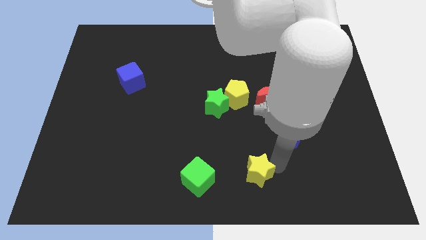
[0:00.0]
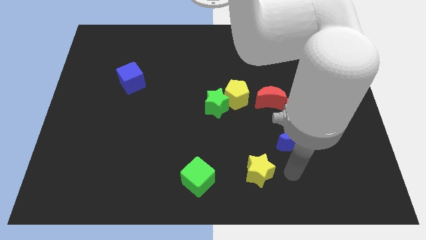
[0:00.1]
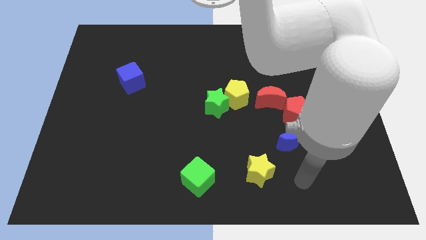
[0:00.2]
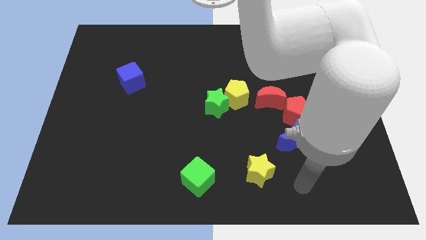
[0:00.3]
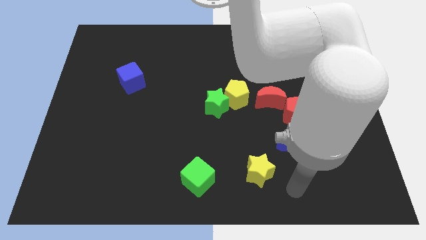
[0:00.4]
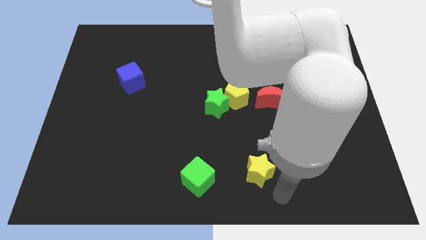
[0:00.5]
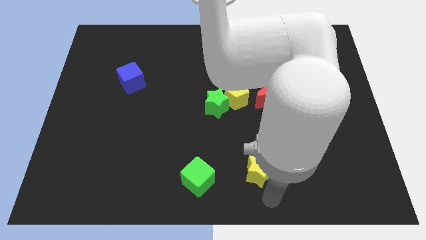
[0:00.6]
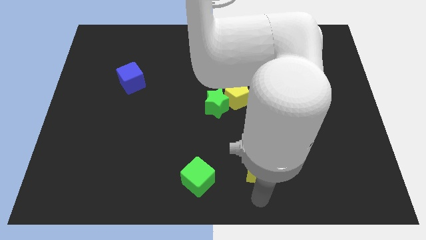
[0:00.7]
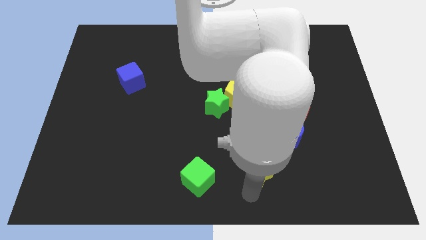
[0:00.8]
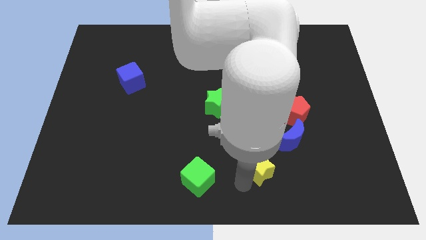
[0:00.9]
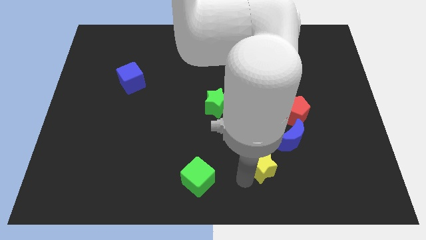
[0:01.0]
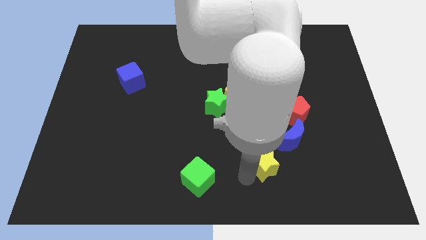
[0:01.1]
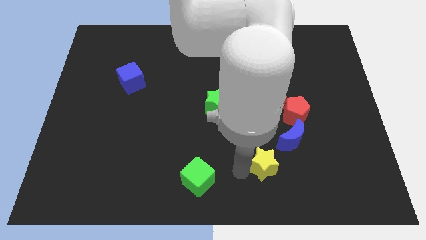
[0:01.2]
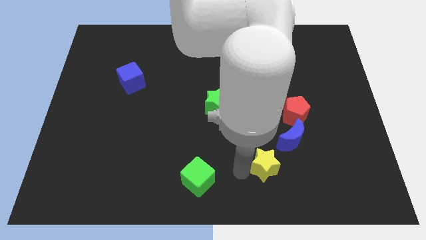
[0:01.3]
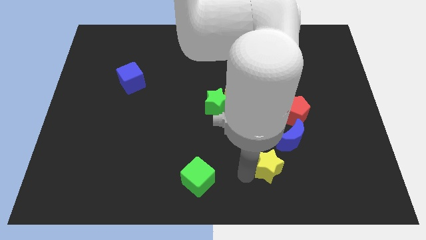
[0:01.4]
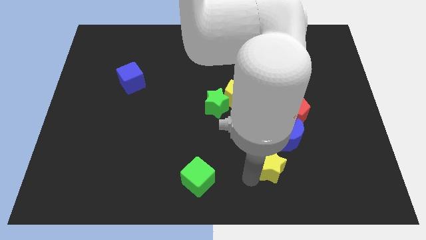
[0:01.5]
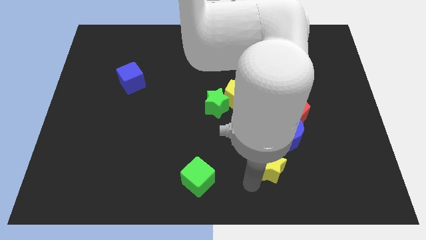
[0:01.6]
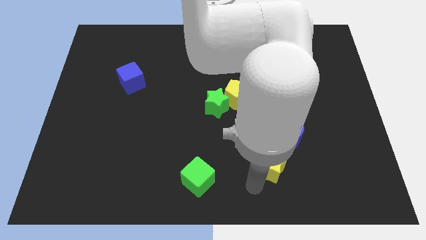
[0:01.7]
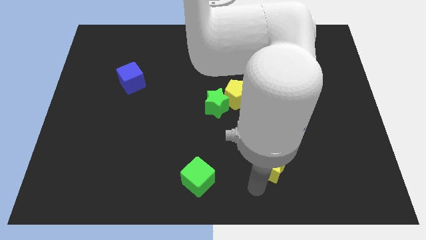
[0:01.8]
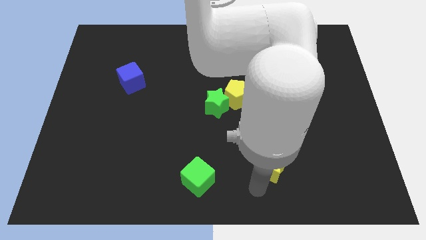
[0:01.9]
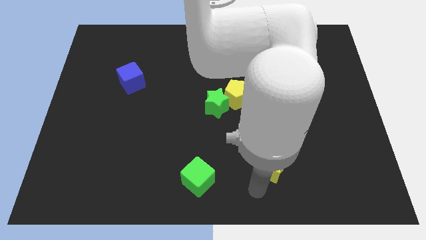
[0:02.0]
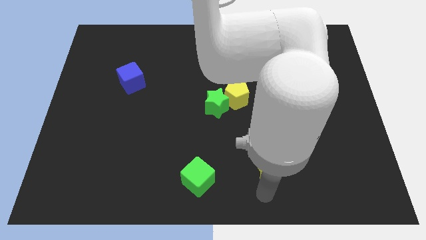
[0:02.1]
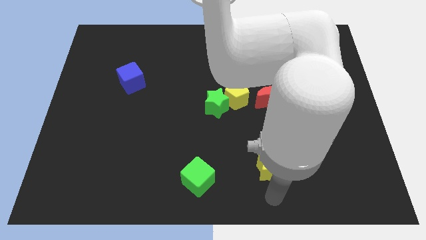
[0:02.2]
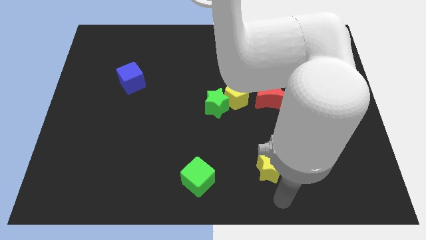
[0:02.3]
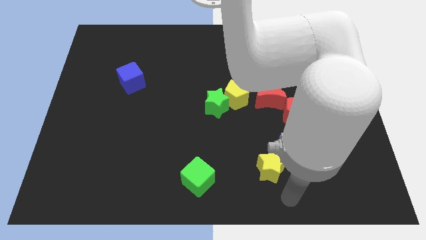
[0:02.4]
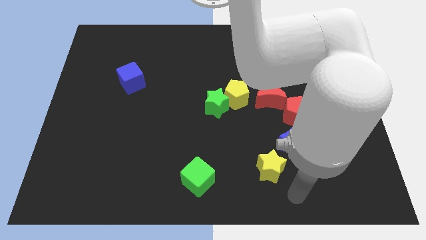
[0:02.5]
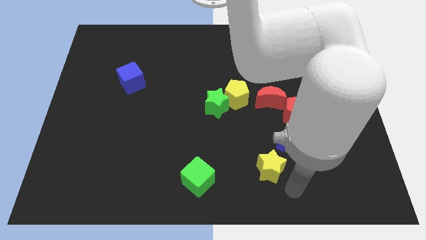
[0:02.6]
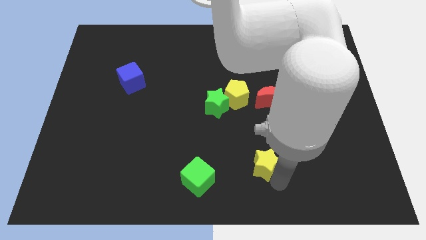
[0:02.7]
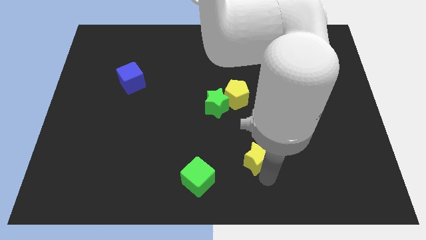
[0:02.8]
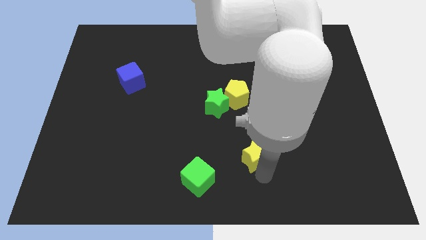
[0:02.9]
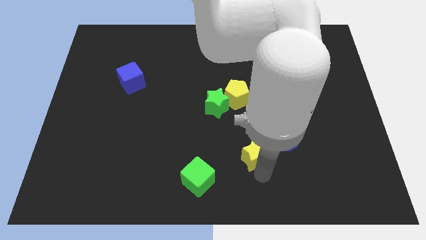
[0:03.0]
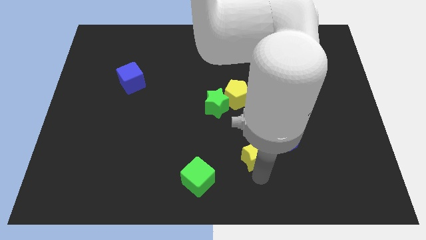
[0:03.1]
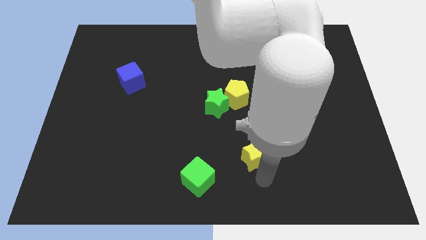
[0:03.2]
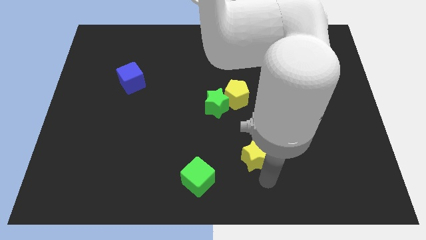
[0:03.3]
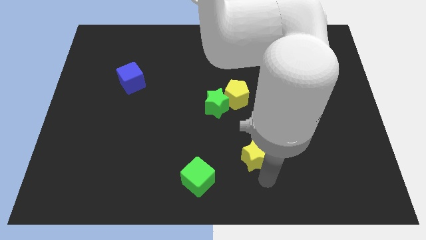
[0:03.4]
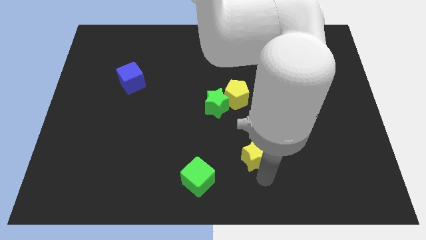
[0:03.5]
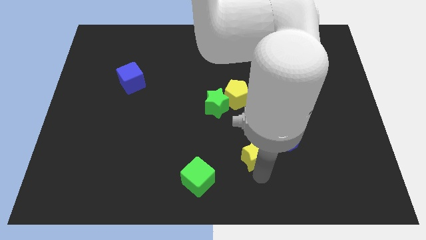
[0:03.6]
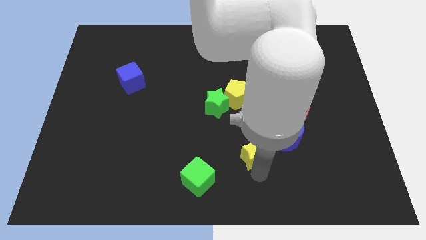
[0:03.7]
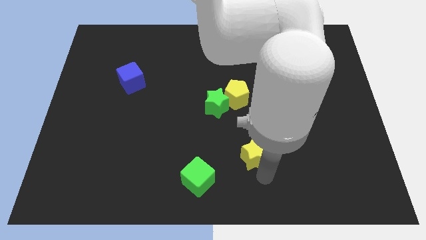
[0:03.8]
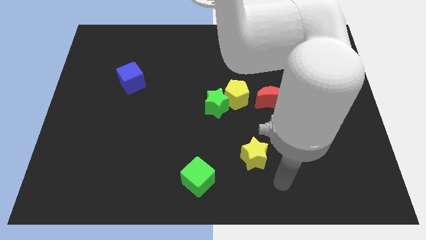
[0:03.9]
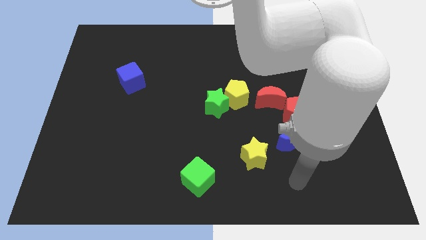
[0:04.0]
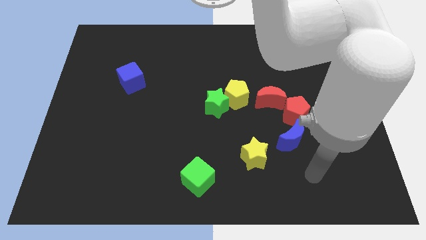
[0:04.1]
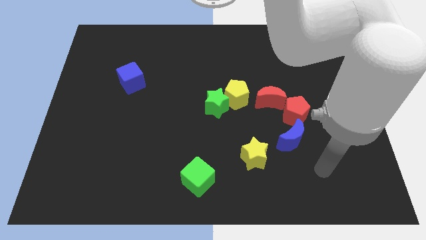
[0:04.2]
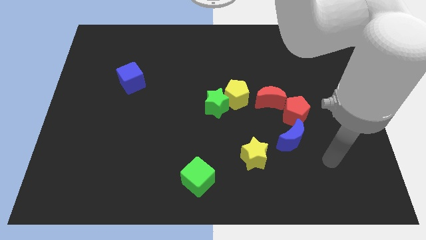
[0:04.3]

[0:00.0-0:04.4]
slide the yellow star diagonal to the green star

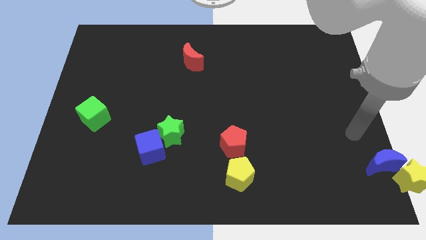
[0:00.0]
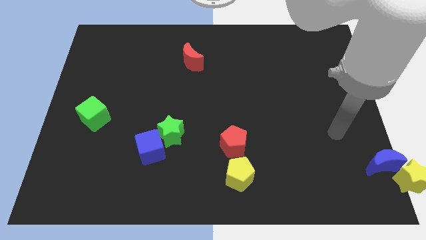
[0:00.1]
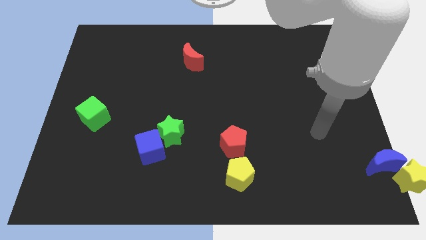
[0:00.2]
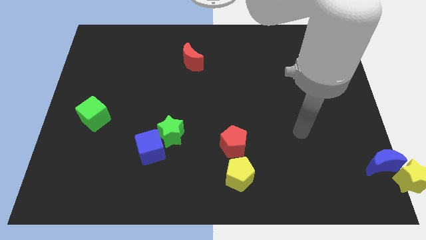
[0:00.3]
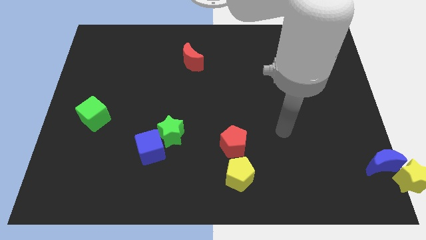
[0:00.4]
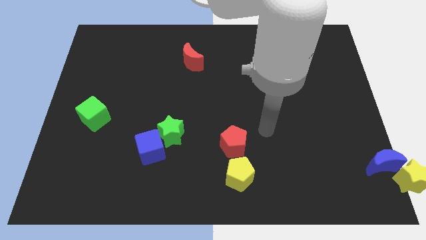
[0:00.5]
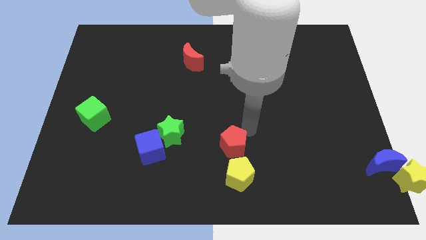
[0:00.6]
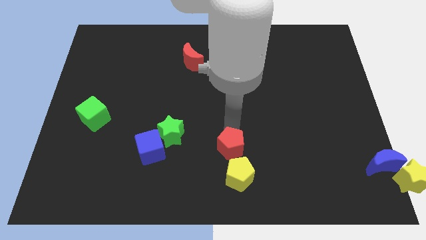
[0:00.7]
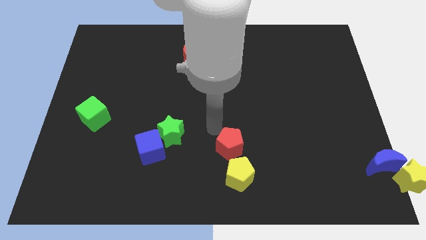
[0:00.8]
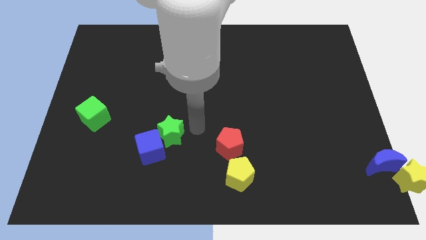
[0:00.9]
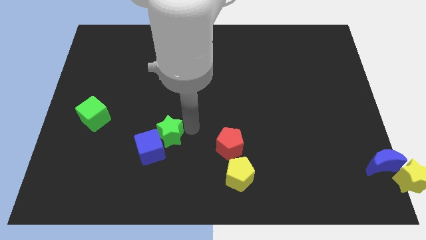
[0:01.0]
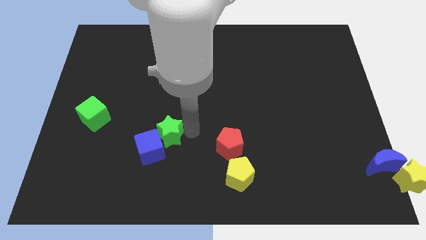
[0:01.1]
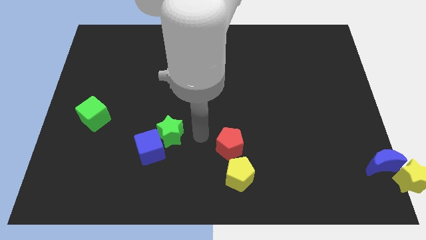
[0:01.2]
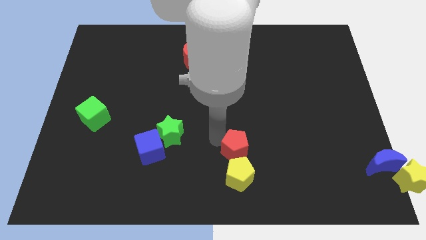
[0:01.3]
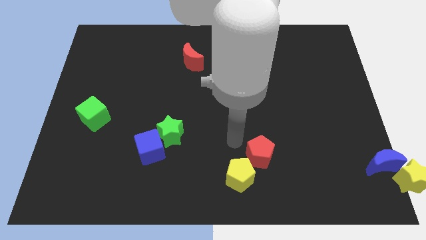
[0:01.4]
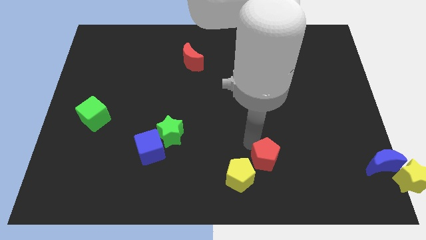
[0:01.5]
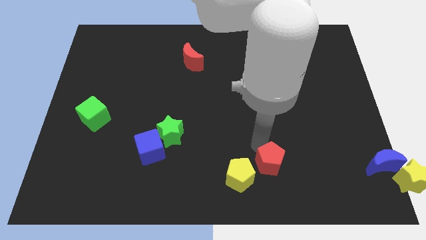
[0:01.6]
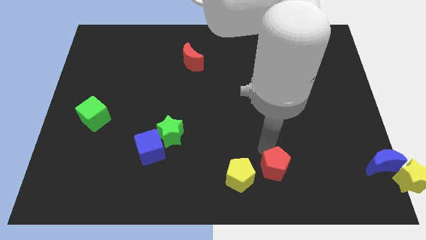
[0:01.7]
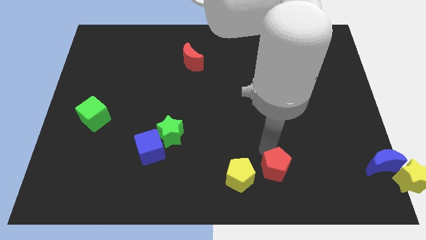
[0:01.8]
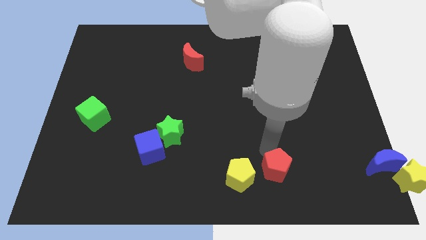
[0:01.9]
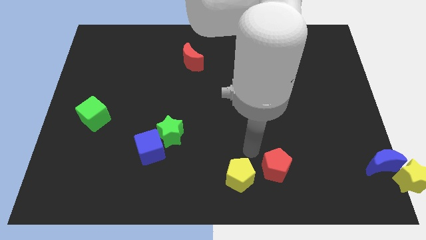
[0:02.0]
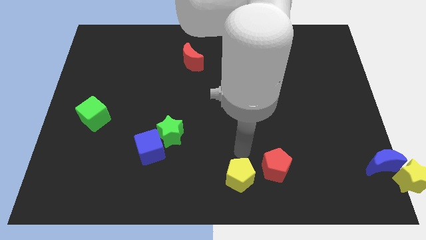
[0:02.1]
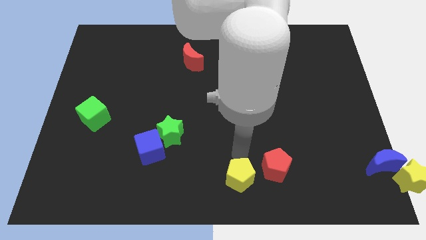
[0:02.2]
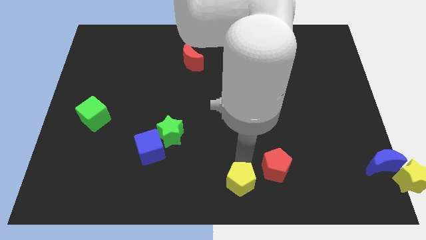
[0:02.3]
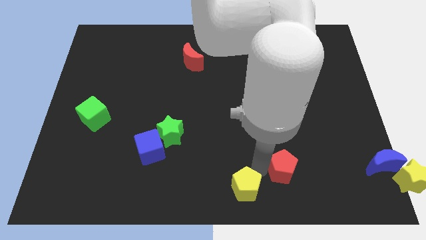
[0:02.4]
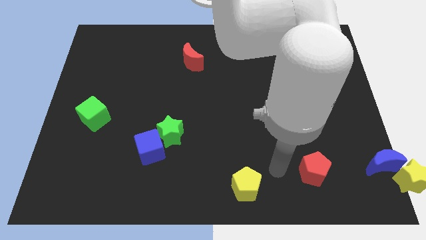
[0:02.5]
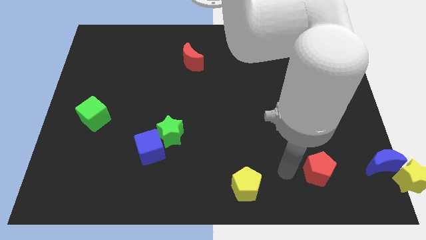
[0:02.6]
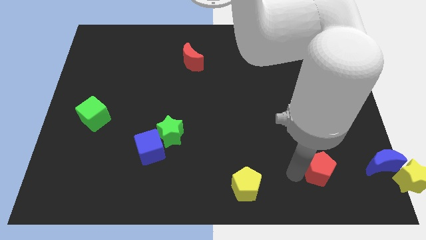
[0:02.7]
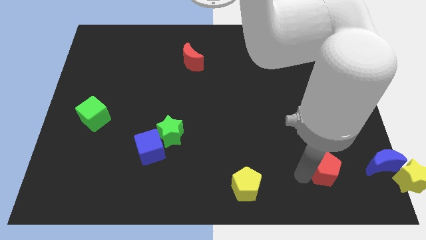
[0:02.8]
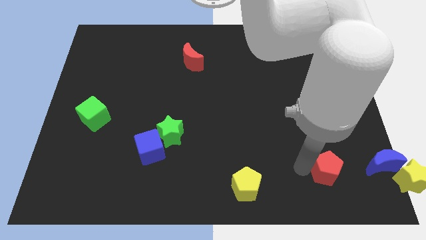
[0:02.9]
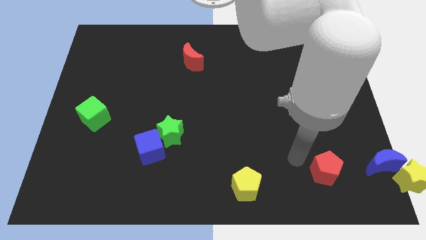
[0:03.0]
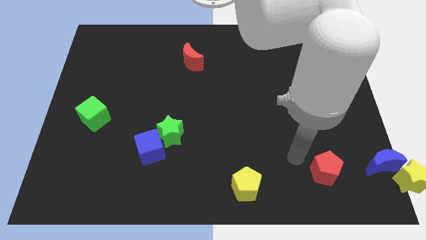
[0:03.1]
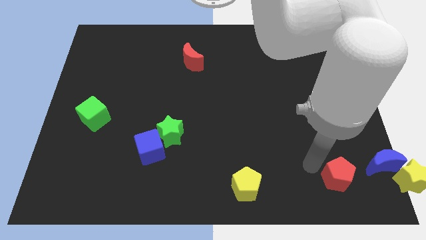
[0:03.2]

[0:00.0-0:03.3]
separate red and the yellow pentagon

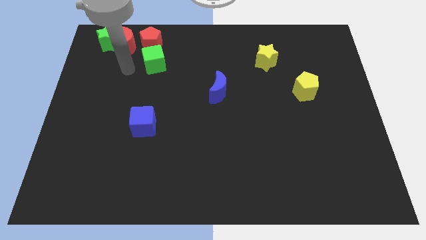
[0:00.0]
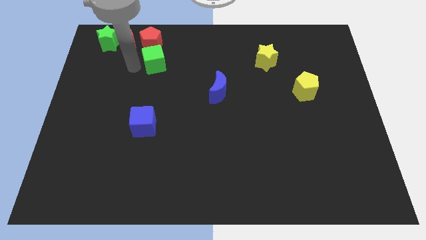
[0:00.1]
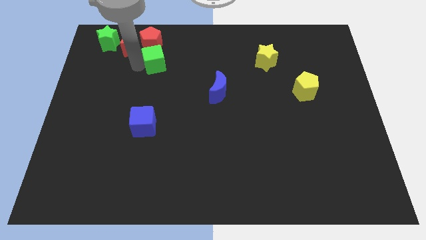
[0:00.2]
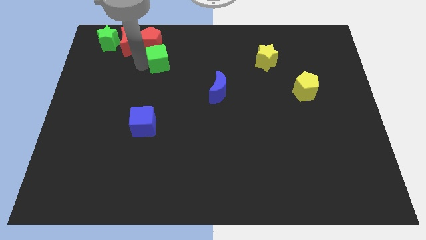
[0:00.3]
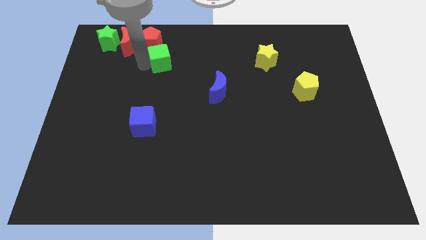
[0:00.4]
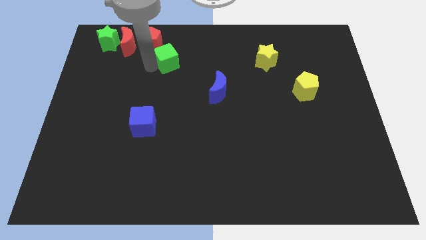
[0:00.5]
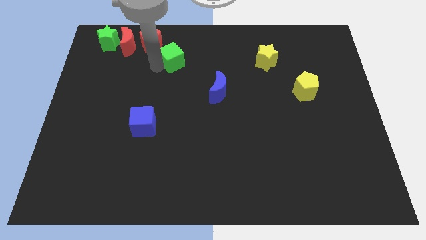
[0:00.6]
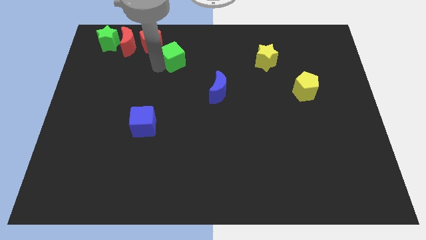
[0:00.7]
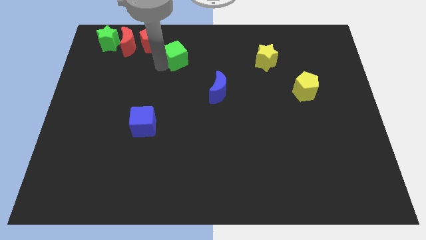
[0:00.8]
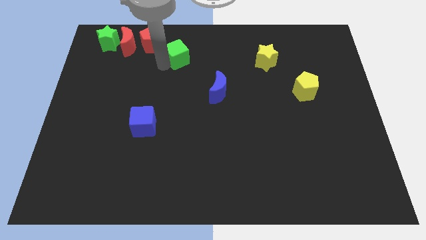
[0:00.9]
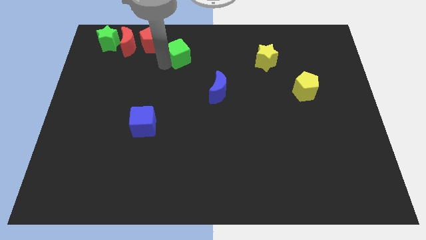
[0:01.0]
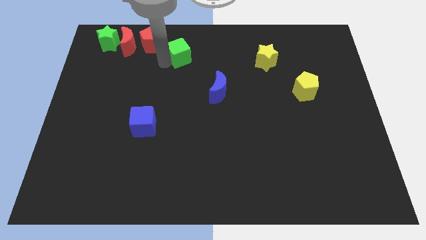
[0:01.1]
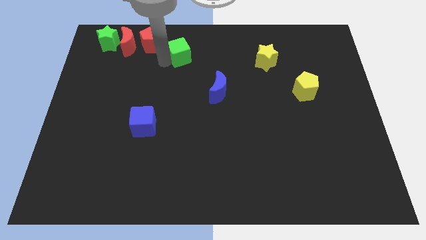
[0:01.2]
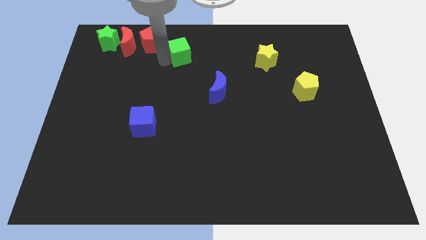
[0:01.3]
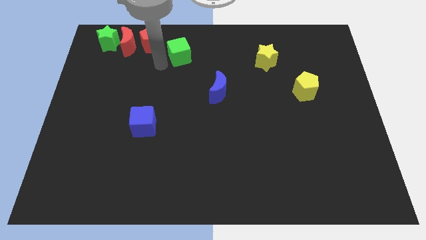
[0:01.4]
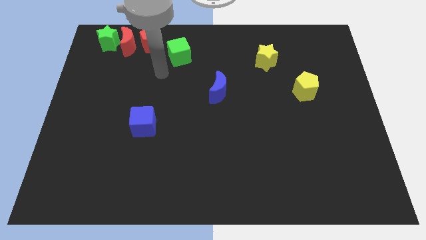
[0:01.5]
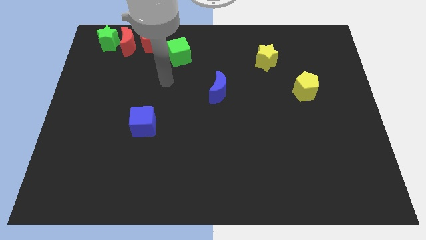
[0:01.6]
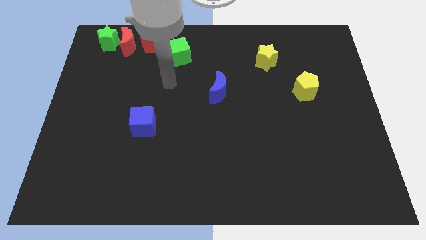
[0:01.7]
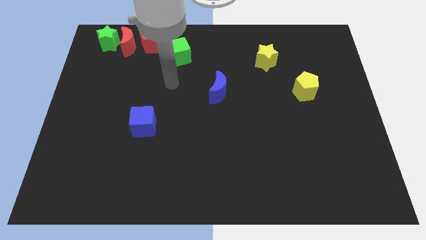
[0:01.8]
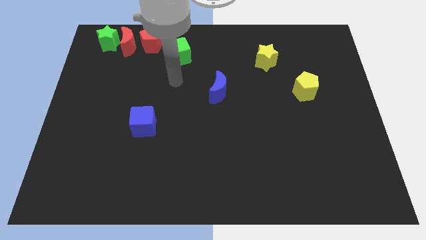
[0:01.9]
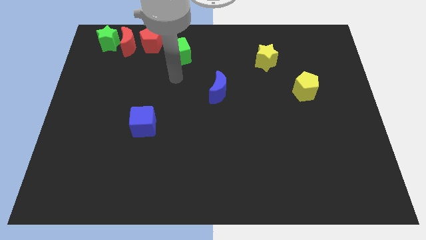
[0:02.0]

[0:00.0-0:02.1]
separate the green cube from the red pentagon
